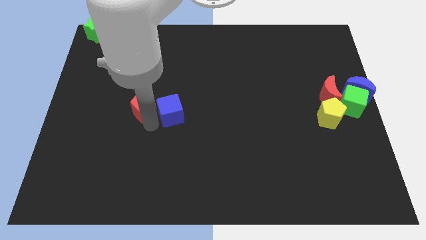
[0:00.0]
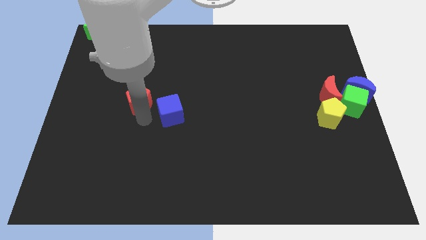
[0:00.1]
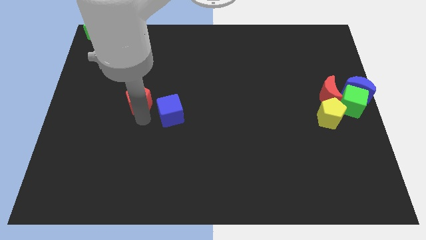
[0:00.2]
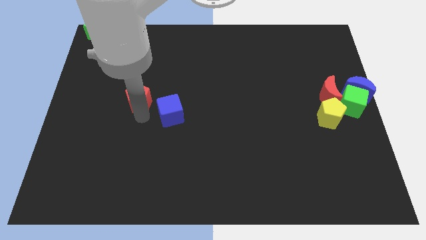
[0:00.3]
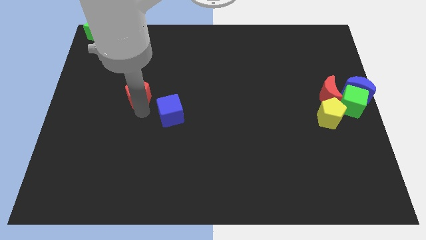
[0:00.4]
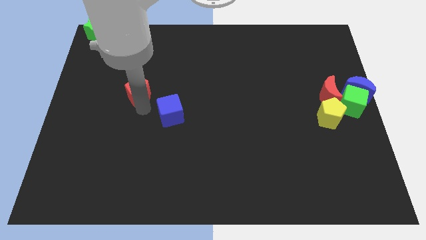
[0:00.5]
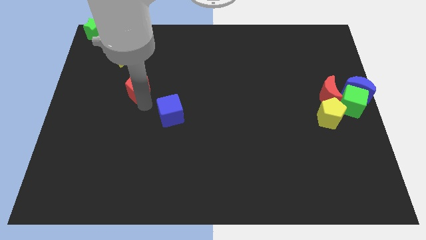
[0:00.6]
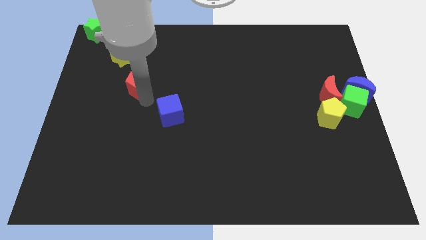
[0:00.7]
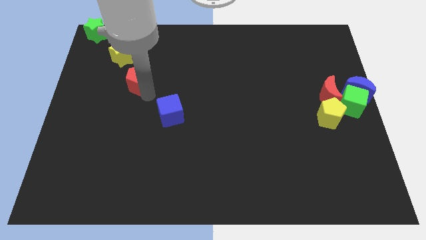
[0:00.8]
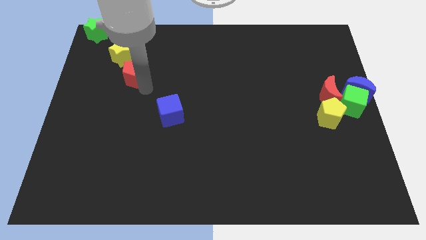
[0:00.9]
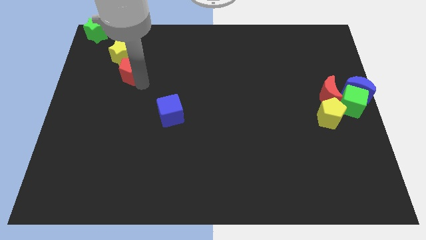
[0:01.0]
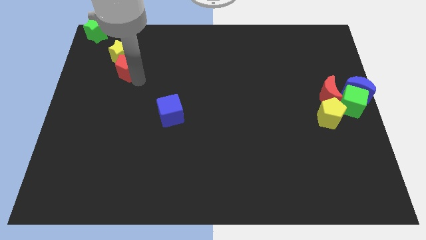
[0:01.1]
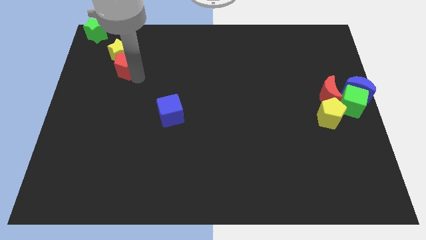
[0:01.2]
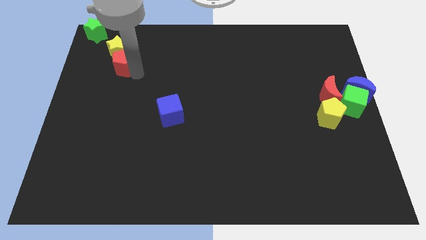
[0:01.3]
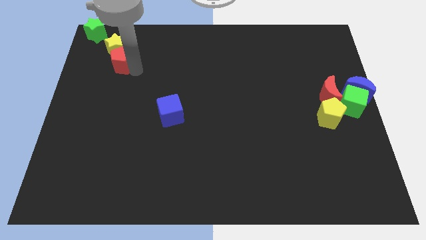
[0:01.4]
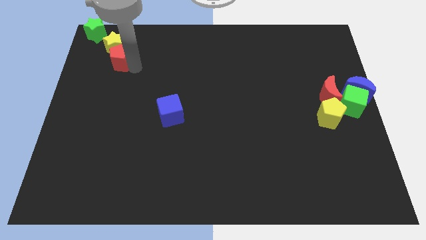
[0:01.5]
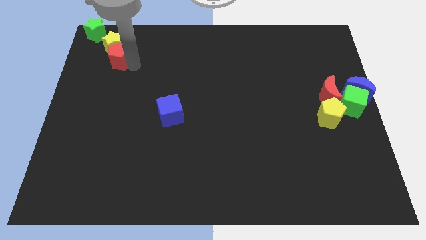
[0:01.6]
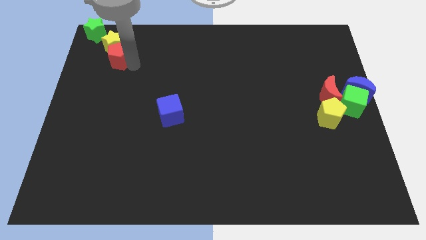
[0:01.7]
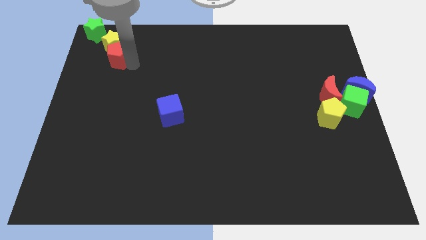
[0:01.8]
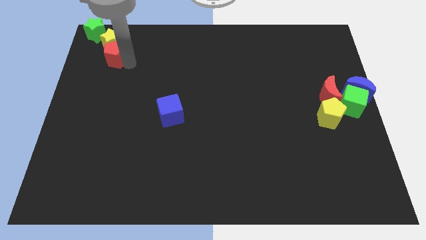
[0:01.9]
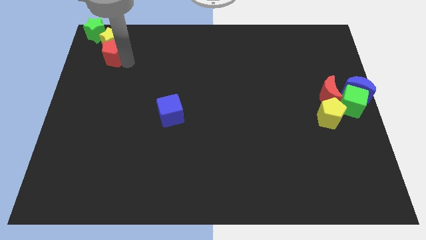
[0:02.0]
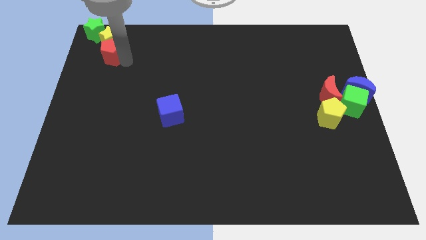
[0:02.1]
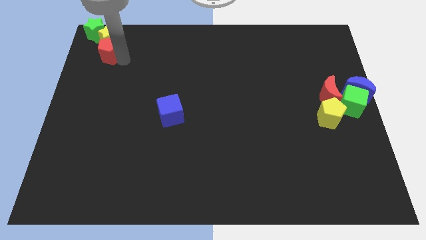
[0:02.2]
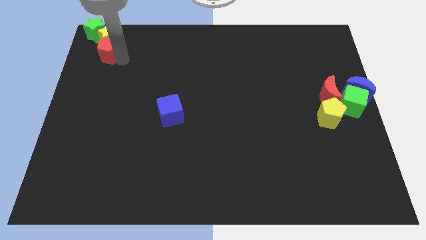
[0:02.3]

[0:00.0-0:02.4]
push the red pentagon into the yellow star diagonally bottom right

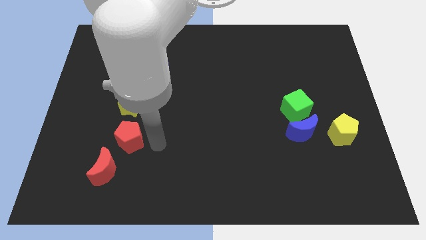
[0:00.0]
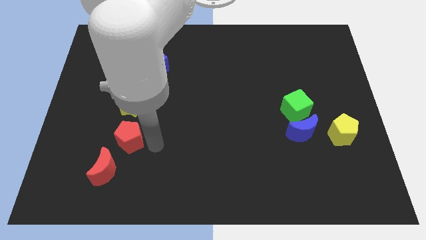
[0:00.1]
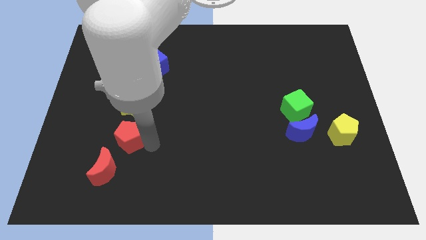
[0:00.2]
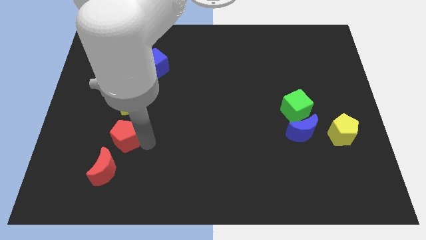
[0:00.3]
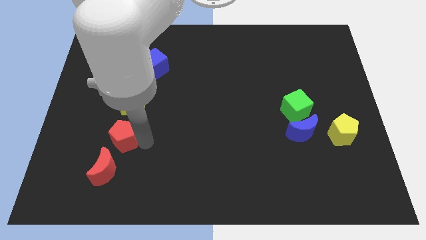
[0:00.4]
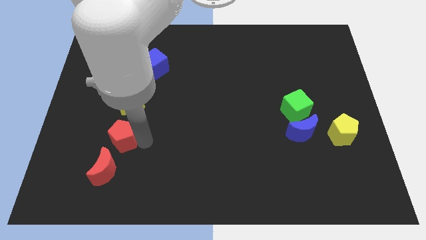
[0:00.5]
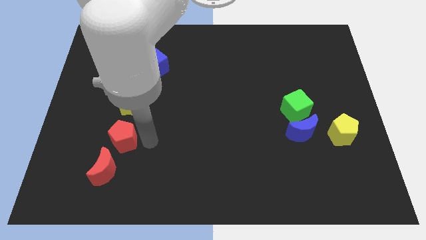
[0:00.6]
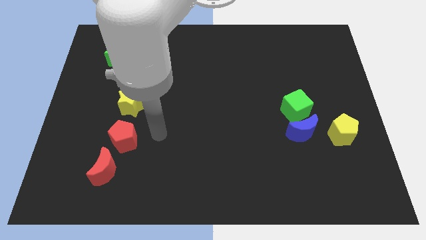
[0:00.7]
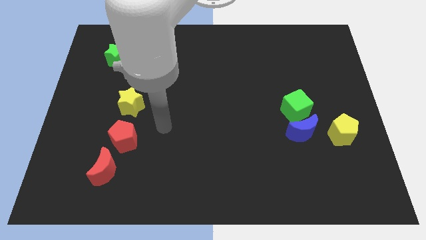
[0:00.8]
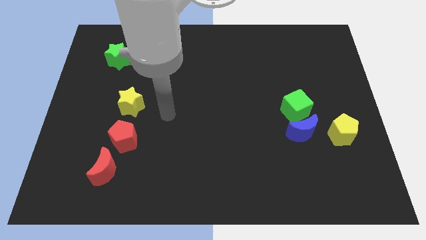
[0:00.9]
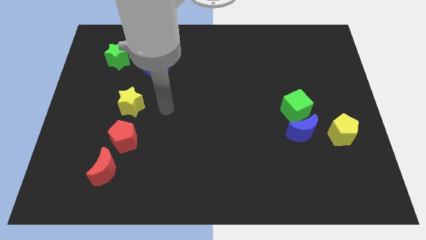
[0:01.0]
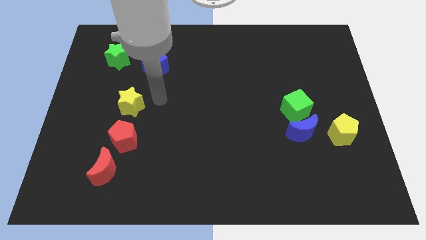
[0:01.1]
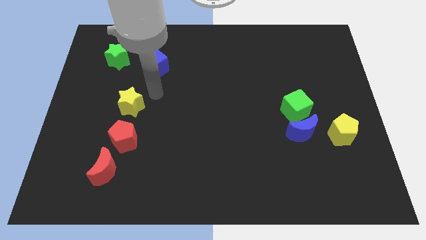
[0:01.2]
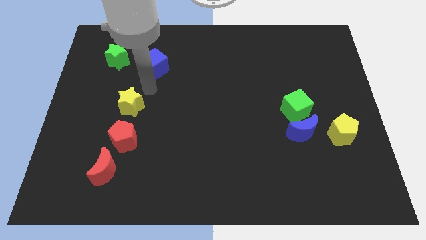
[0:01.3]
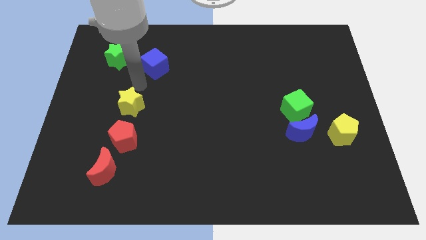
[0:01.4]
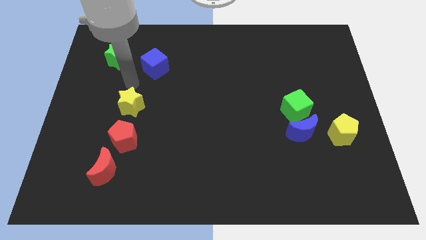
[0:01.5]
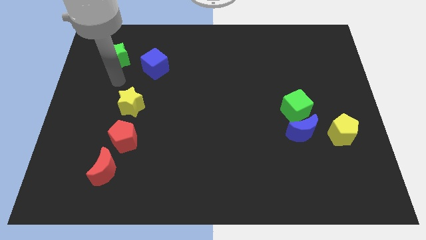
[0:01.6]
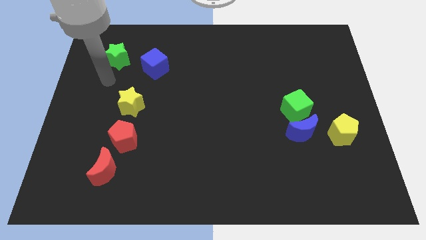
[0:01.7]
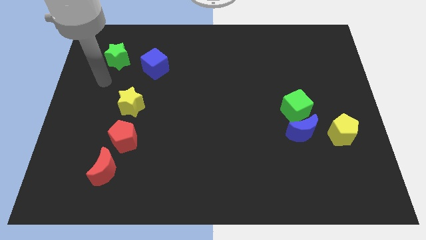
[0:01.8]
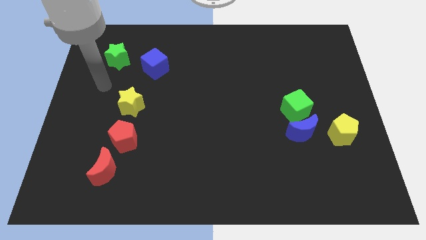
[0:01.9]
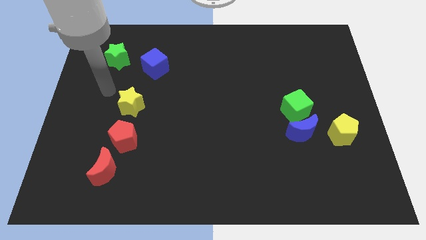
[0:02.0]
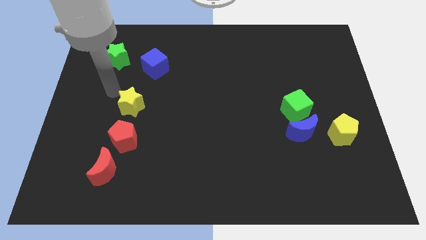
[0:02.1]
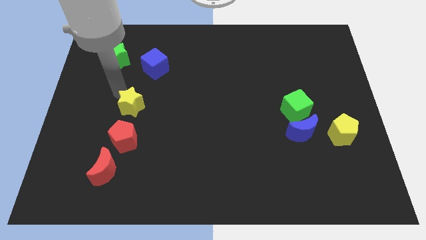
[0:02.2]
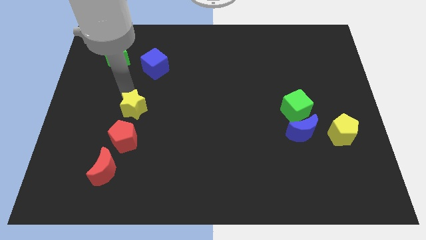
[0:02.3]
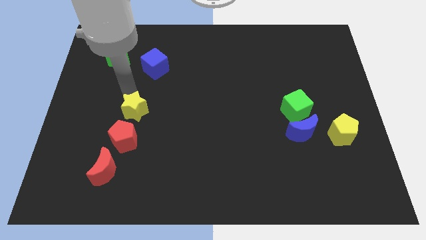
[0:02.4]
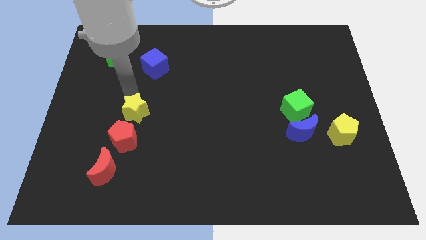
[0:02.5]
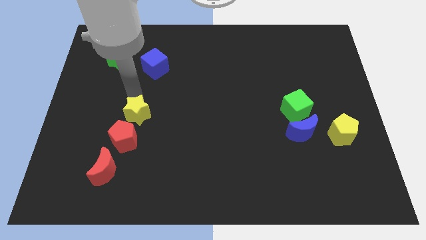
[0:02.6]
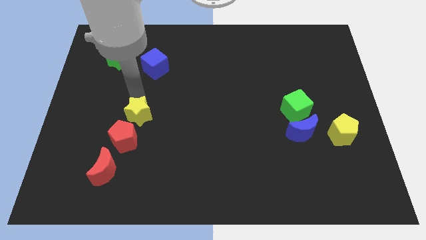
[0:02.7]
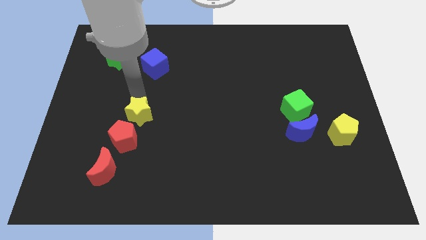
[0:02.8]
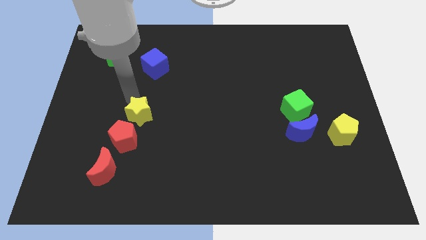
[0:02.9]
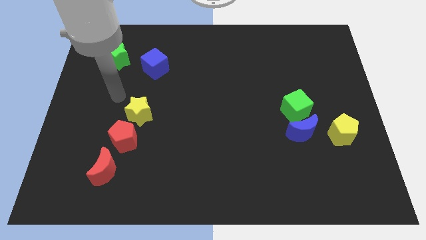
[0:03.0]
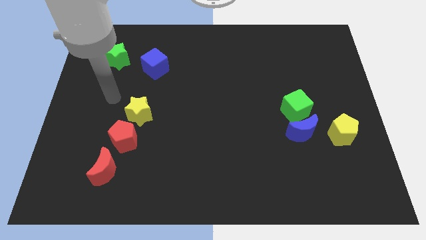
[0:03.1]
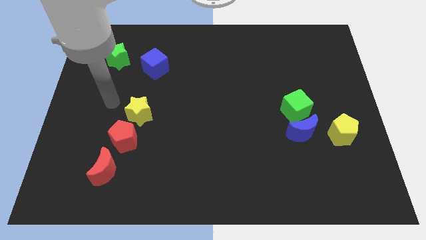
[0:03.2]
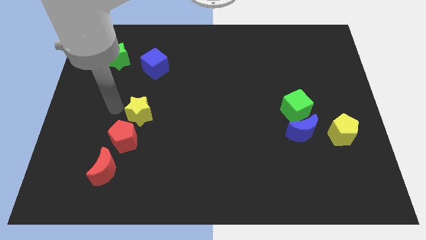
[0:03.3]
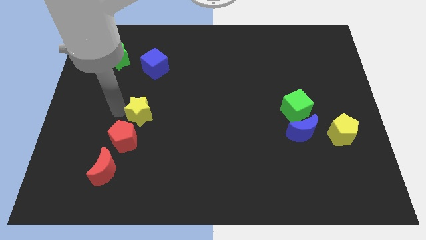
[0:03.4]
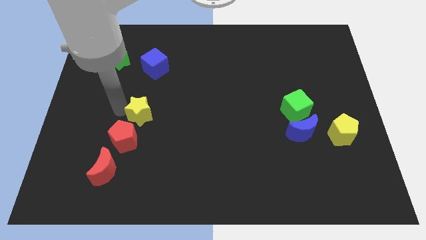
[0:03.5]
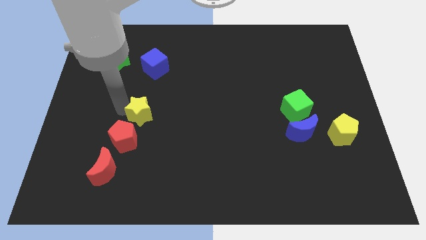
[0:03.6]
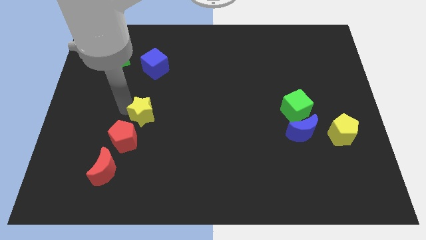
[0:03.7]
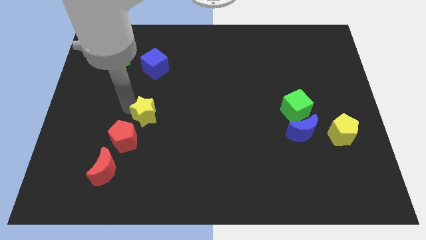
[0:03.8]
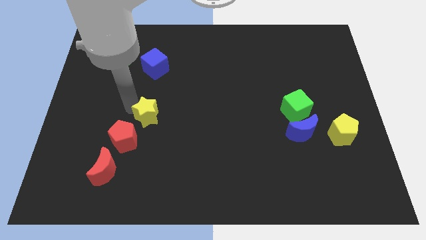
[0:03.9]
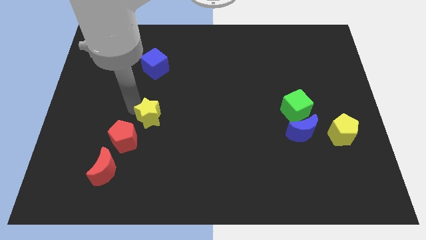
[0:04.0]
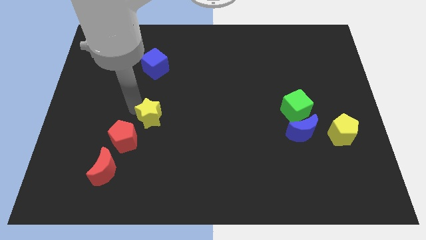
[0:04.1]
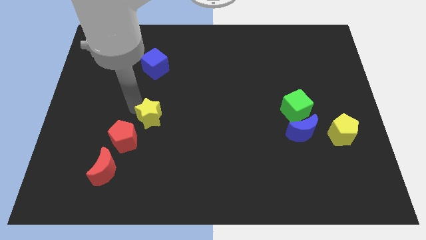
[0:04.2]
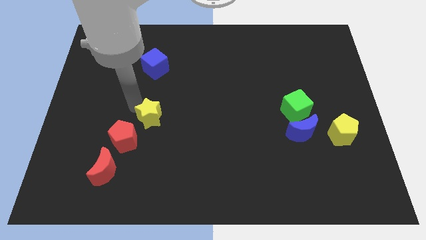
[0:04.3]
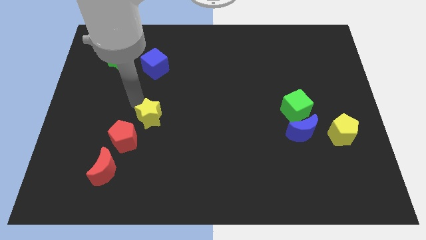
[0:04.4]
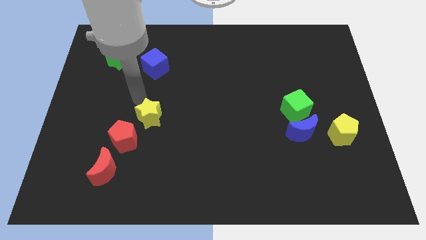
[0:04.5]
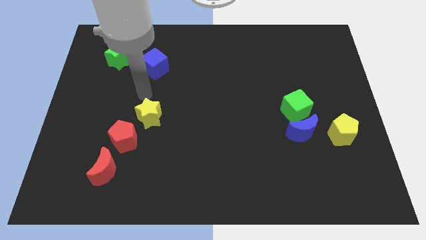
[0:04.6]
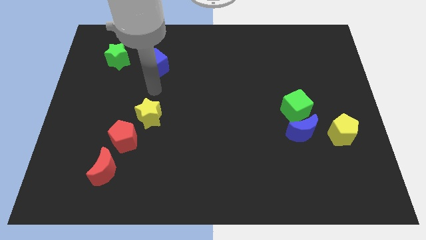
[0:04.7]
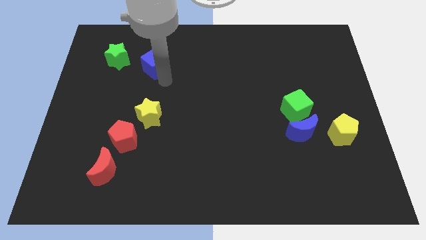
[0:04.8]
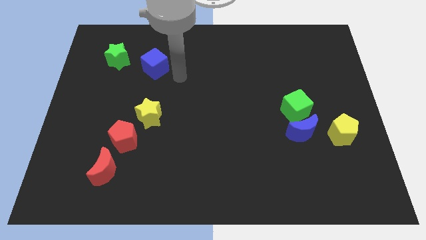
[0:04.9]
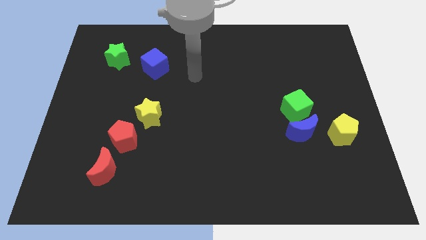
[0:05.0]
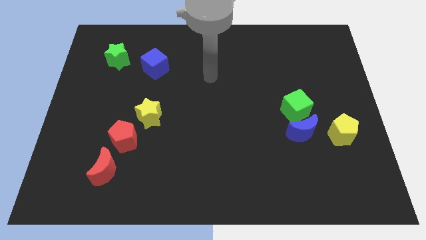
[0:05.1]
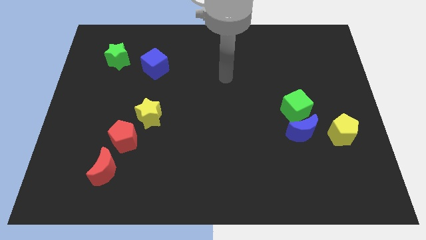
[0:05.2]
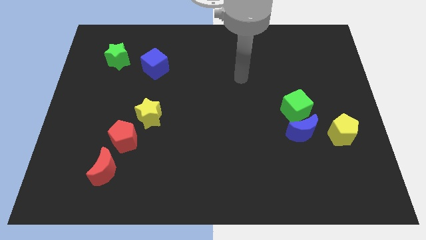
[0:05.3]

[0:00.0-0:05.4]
push the yellow star to top right of red pentagon

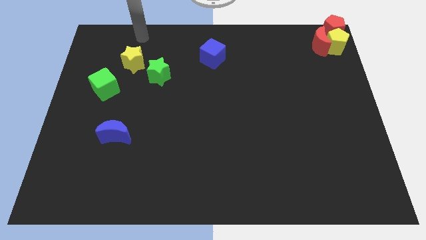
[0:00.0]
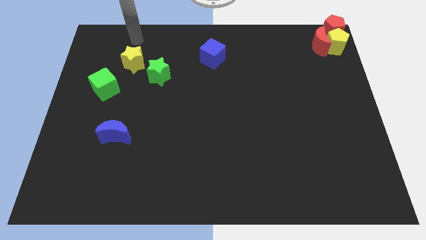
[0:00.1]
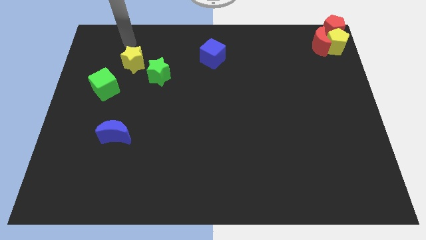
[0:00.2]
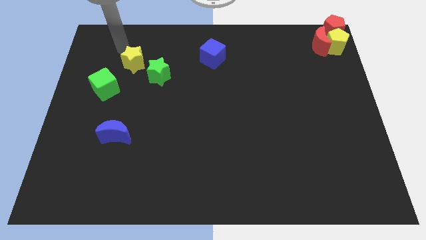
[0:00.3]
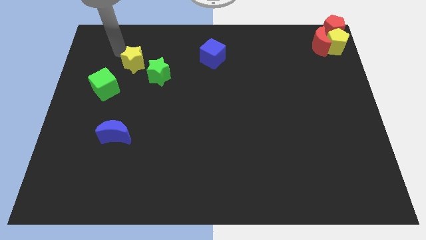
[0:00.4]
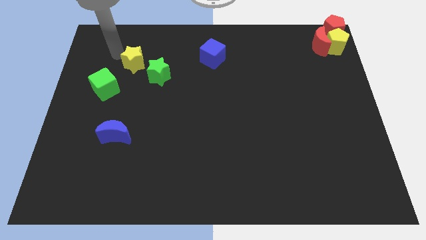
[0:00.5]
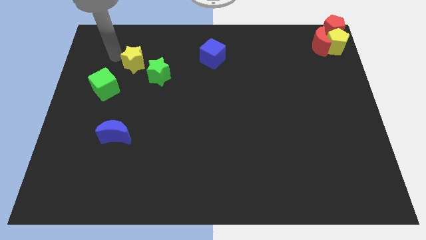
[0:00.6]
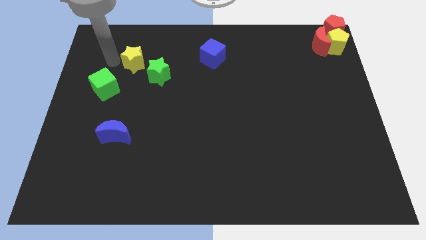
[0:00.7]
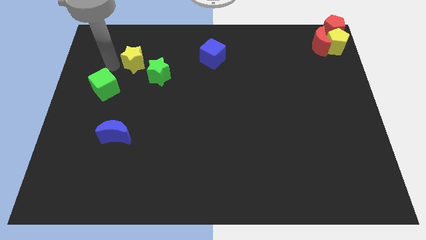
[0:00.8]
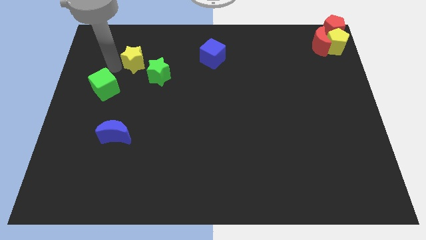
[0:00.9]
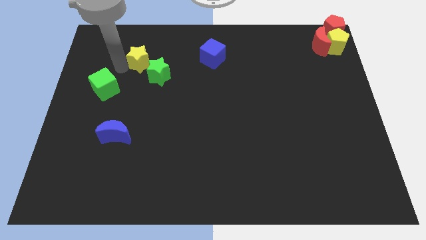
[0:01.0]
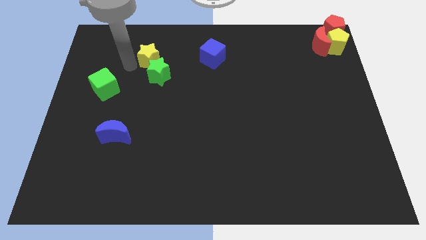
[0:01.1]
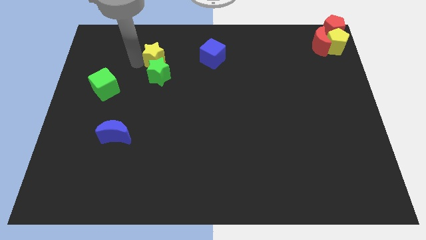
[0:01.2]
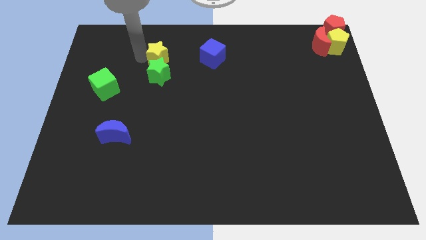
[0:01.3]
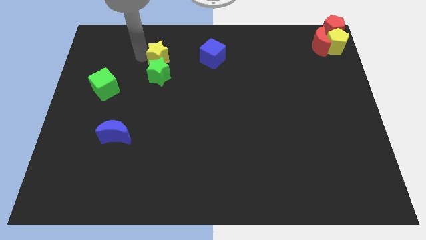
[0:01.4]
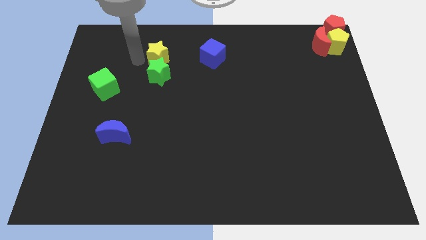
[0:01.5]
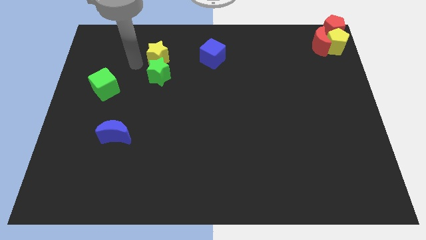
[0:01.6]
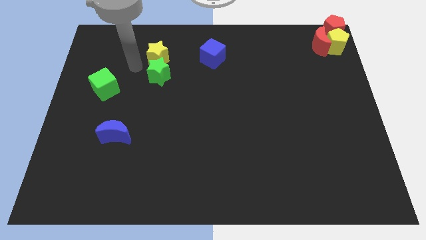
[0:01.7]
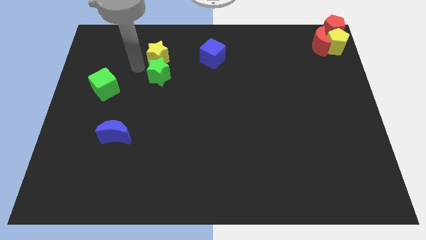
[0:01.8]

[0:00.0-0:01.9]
place the yellow star above the green star
